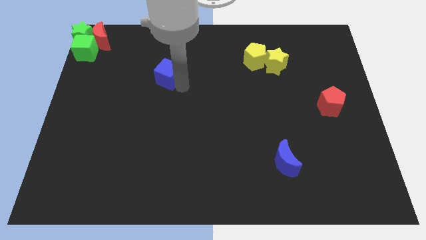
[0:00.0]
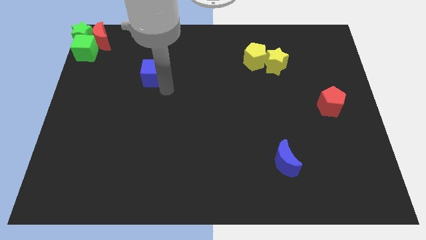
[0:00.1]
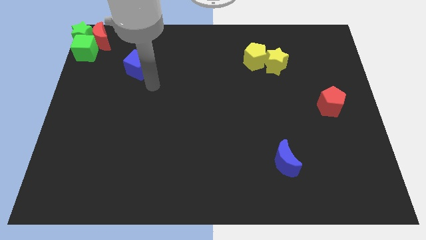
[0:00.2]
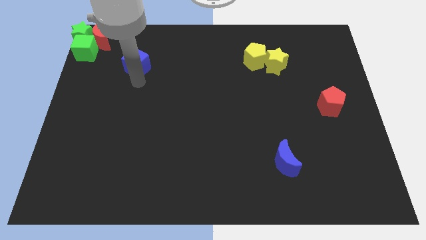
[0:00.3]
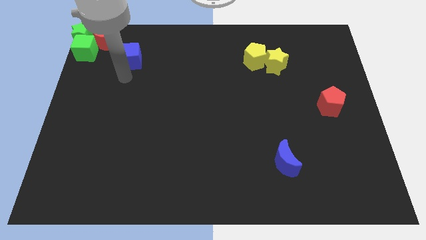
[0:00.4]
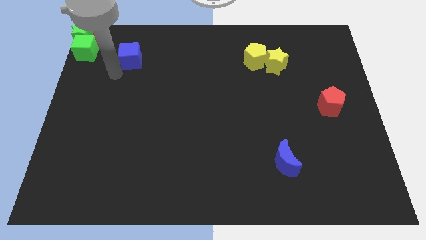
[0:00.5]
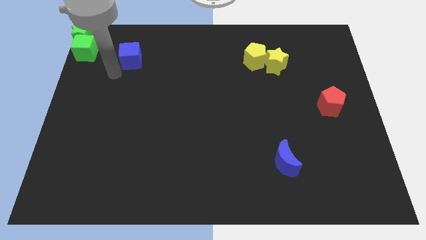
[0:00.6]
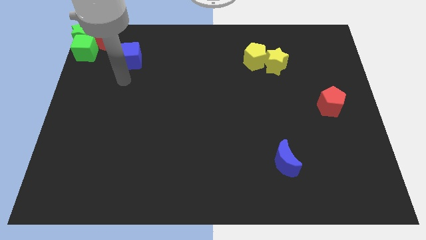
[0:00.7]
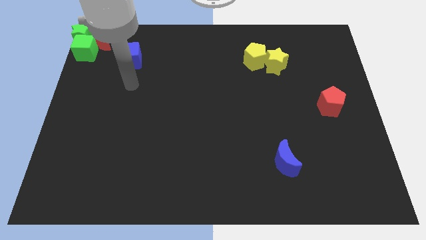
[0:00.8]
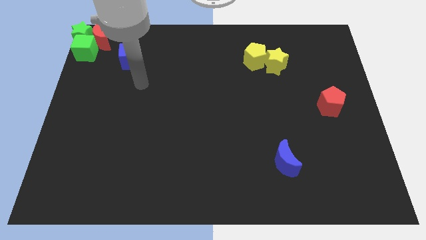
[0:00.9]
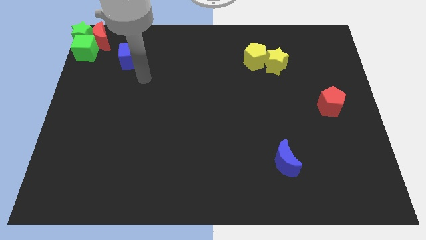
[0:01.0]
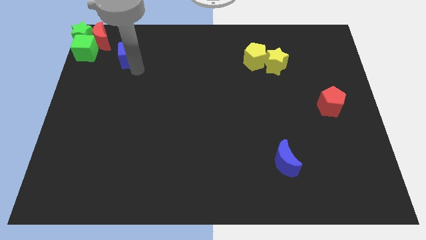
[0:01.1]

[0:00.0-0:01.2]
push the blue cube towards the top left of the corner

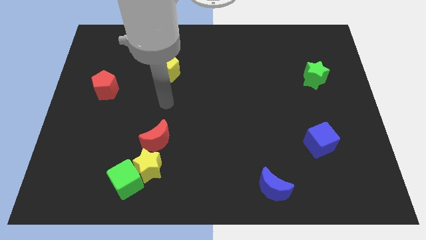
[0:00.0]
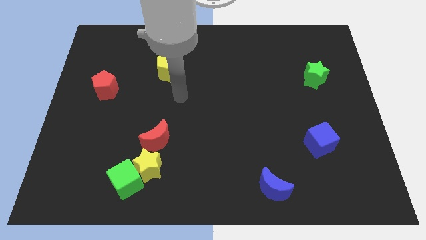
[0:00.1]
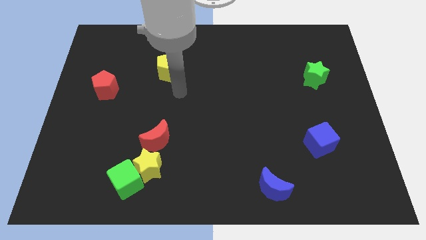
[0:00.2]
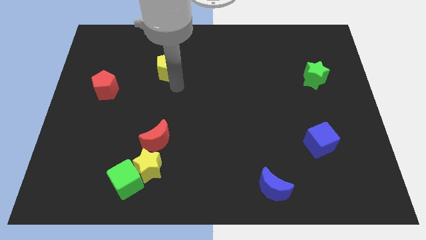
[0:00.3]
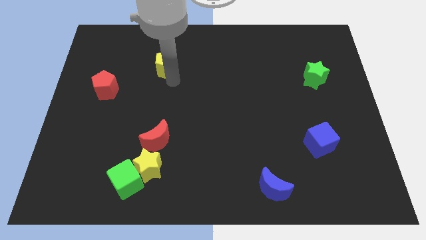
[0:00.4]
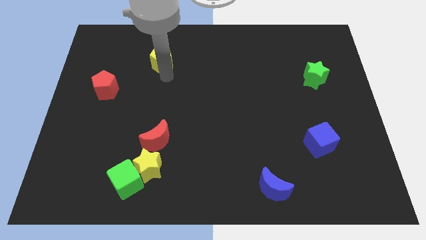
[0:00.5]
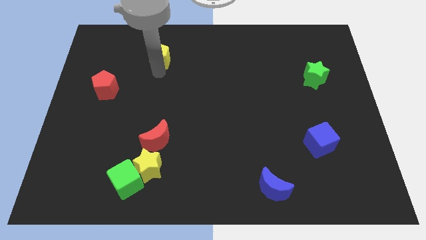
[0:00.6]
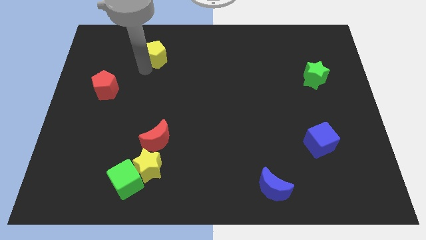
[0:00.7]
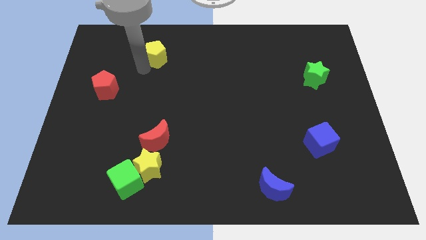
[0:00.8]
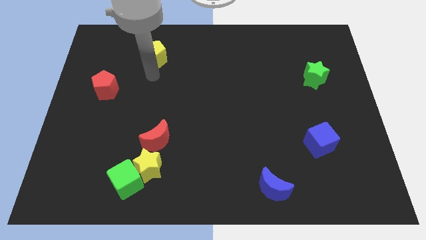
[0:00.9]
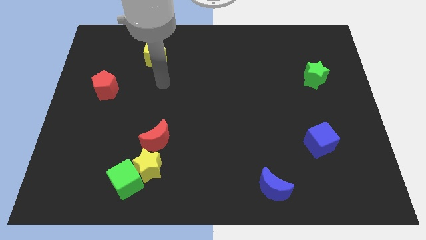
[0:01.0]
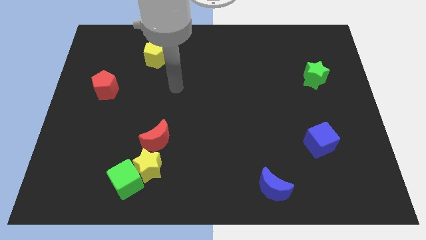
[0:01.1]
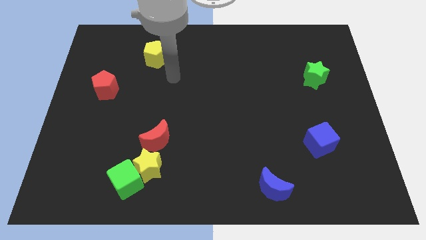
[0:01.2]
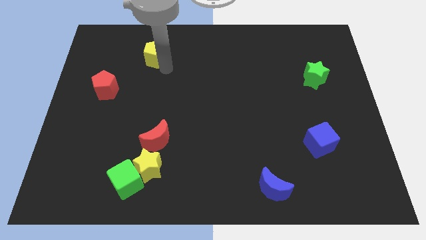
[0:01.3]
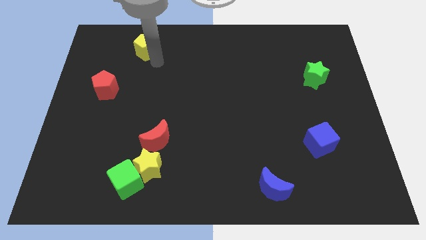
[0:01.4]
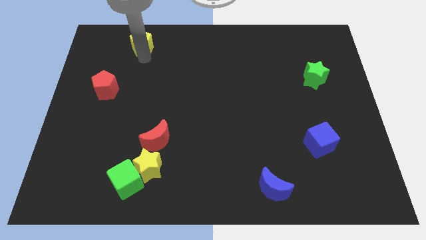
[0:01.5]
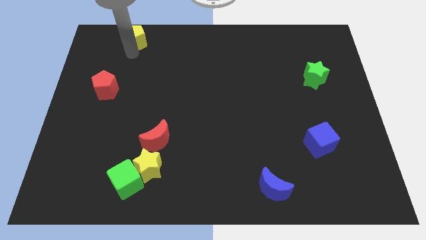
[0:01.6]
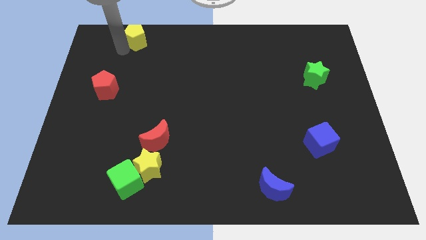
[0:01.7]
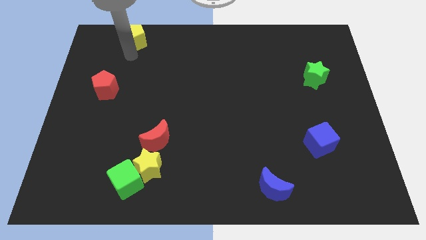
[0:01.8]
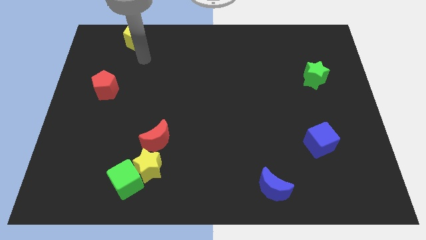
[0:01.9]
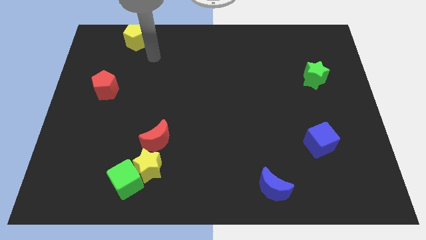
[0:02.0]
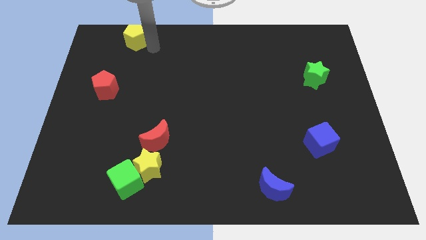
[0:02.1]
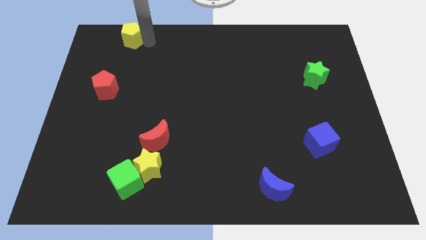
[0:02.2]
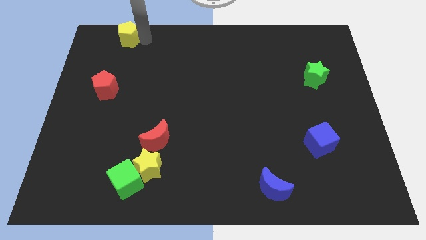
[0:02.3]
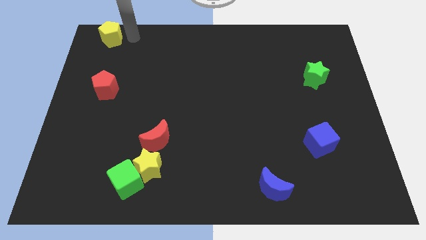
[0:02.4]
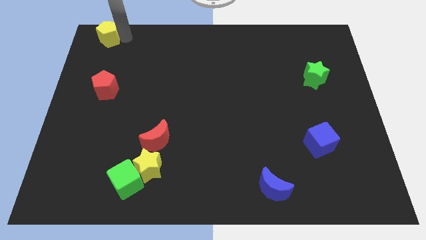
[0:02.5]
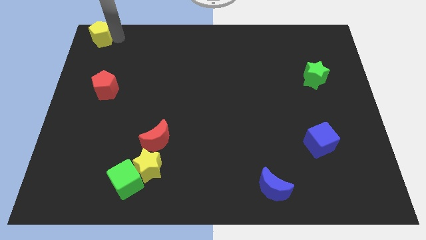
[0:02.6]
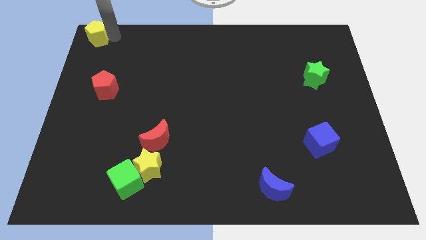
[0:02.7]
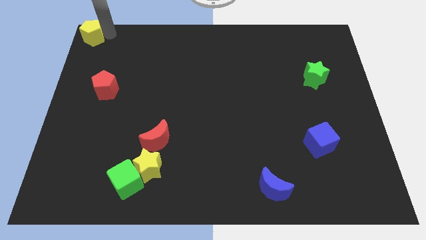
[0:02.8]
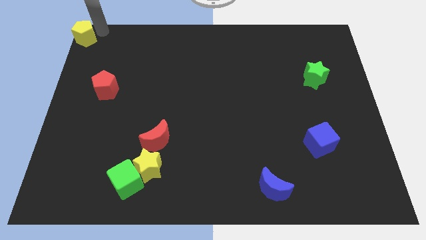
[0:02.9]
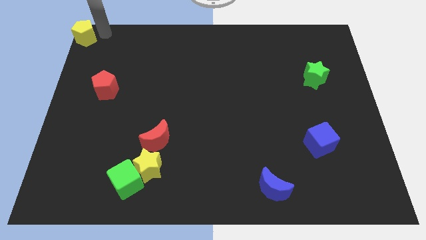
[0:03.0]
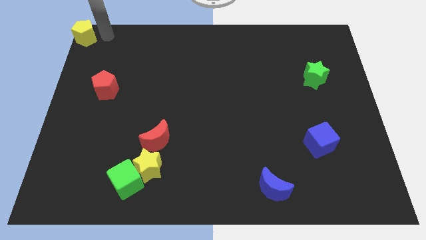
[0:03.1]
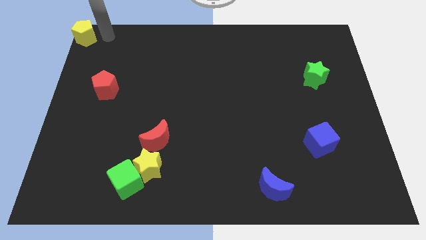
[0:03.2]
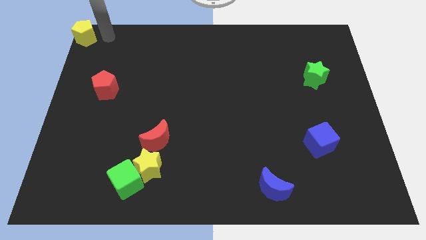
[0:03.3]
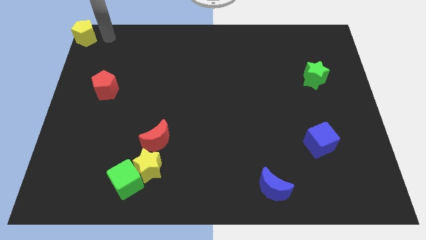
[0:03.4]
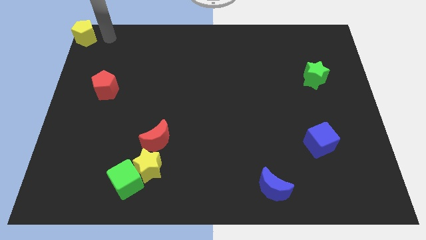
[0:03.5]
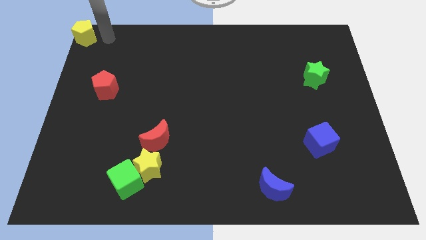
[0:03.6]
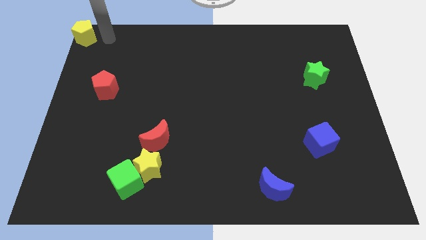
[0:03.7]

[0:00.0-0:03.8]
move the yellow pentagon to the top left corner

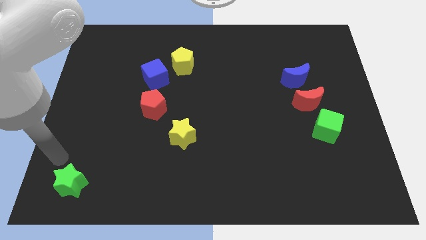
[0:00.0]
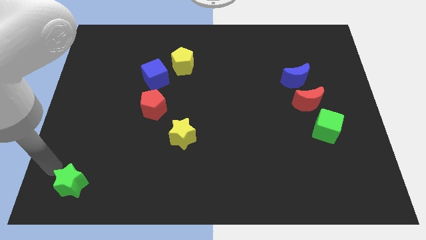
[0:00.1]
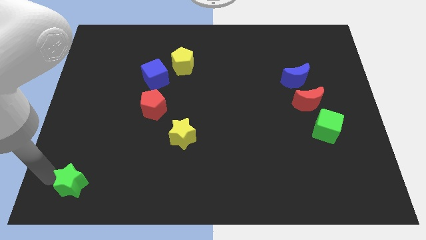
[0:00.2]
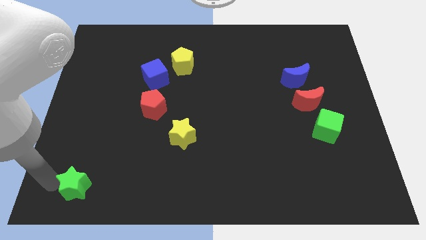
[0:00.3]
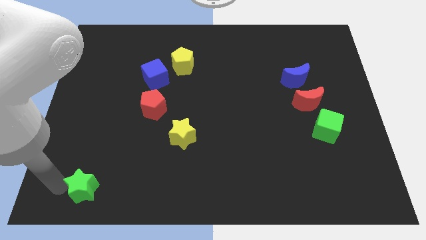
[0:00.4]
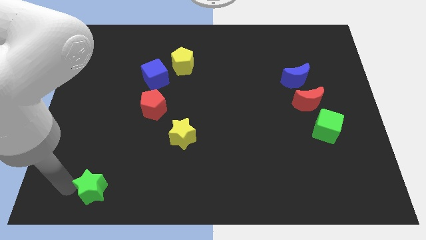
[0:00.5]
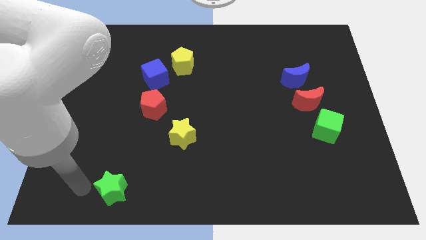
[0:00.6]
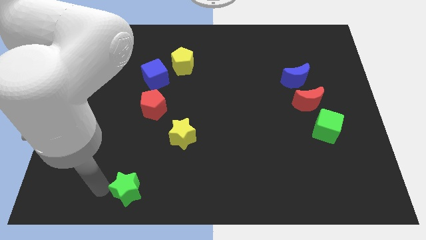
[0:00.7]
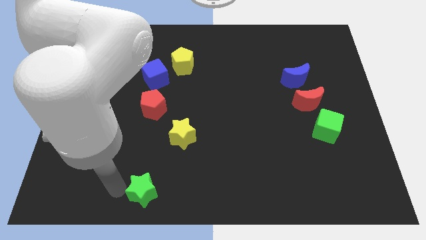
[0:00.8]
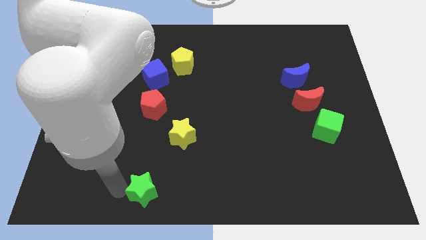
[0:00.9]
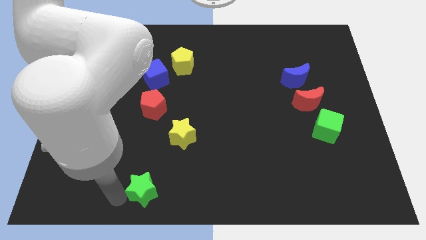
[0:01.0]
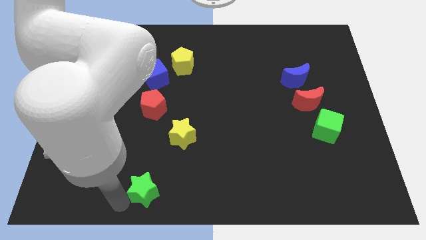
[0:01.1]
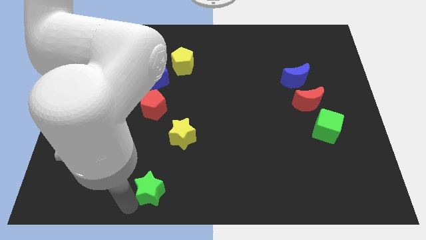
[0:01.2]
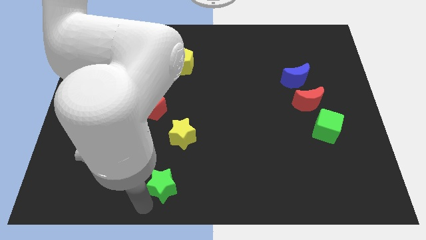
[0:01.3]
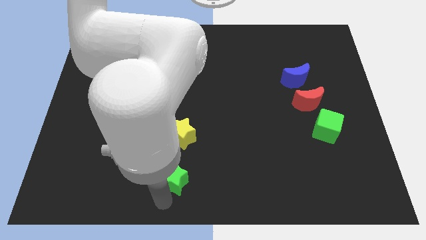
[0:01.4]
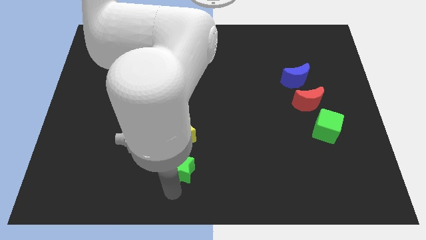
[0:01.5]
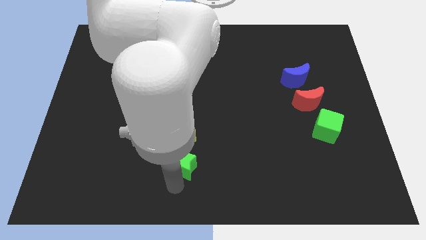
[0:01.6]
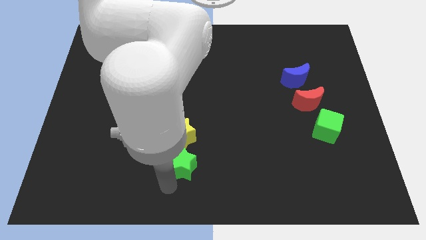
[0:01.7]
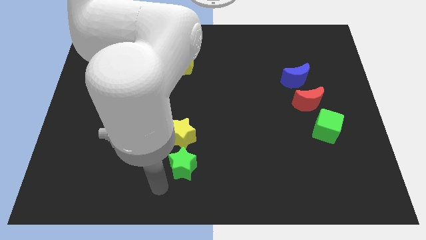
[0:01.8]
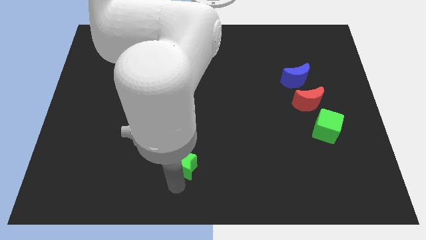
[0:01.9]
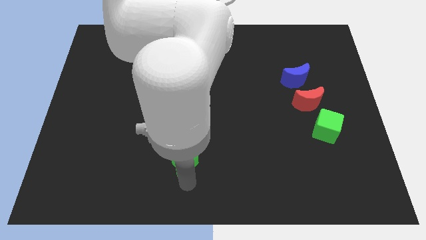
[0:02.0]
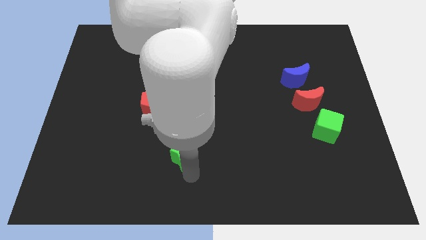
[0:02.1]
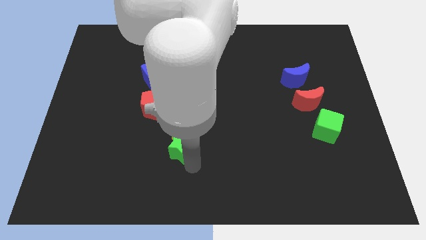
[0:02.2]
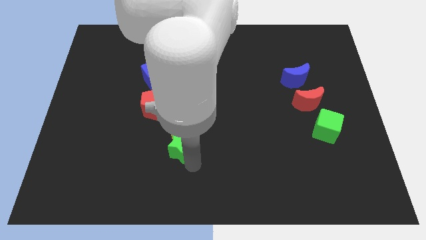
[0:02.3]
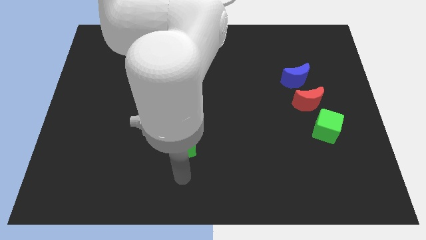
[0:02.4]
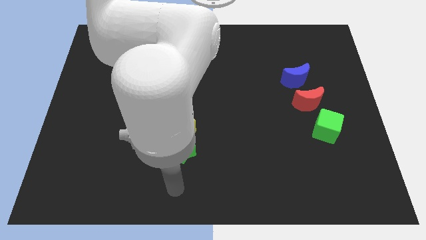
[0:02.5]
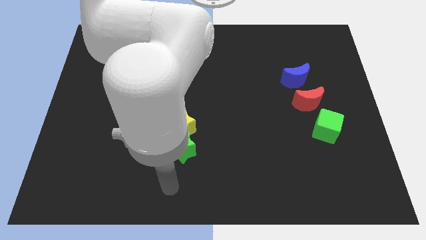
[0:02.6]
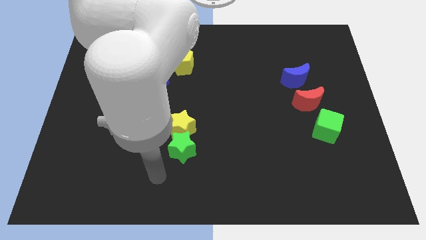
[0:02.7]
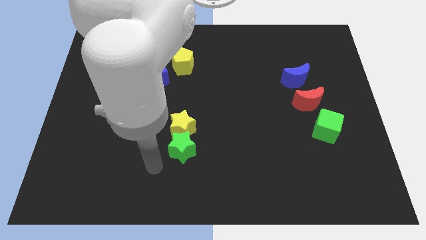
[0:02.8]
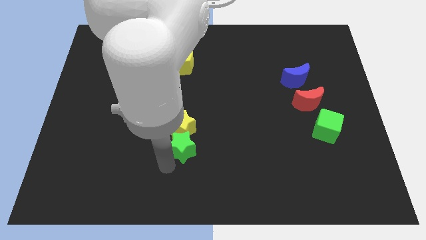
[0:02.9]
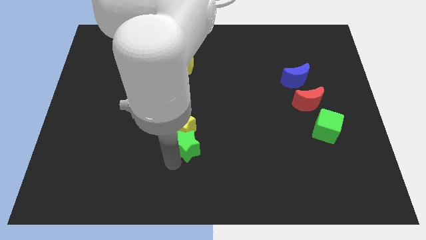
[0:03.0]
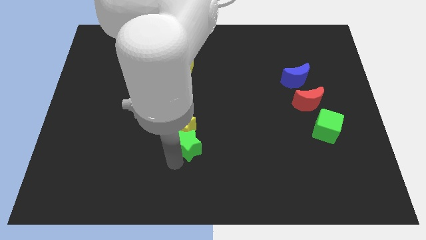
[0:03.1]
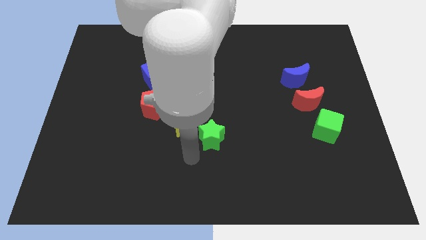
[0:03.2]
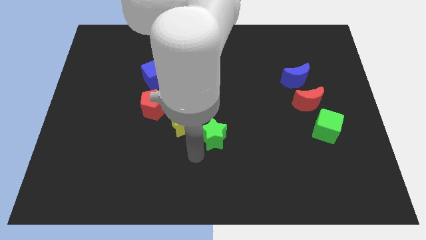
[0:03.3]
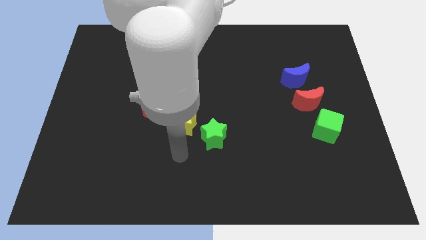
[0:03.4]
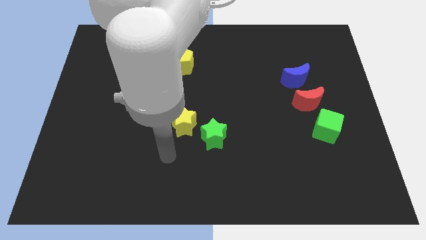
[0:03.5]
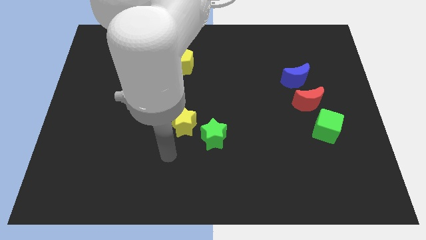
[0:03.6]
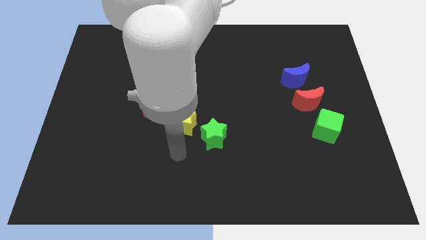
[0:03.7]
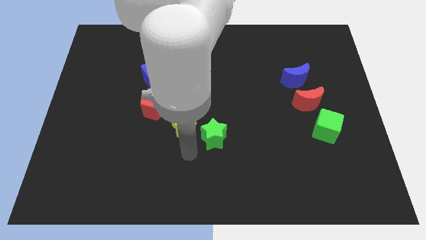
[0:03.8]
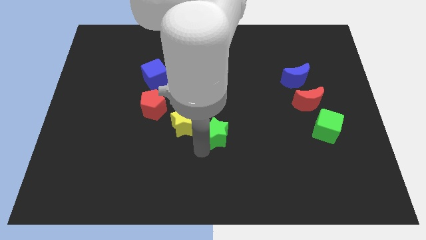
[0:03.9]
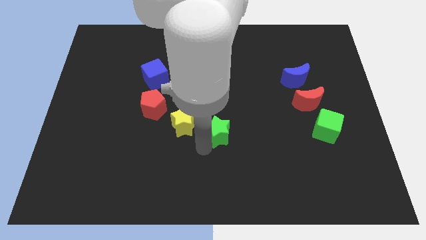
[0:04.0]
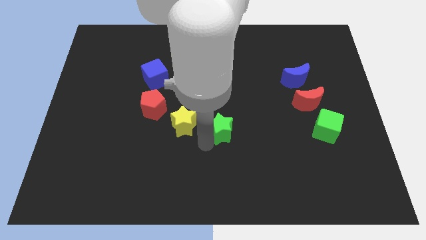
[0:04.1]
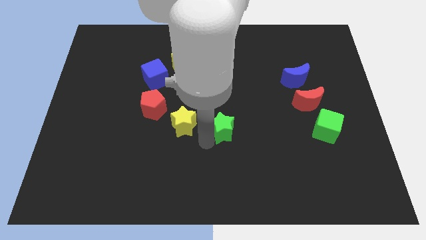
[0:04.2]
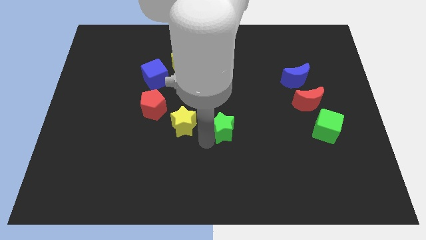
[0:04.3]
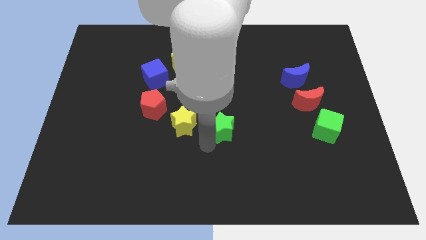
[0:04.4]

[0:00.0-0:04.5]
push the green star parallel to the yellow star
